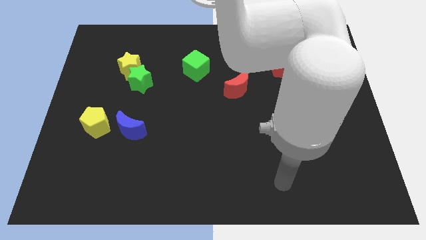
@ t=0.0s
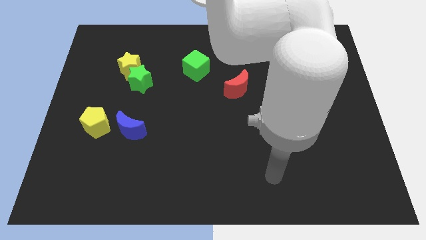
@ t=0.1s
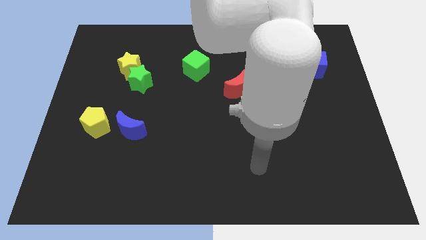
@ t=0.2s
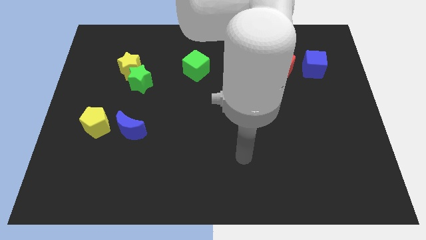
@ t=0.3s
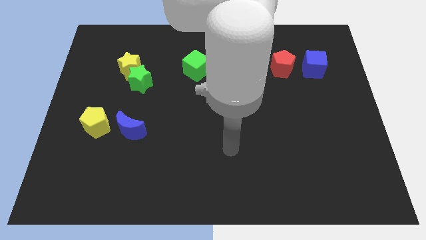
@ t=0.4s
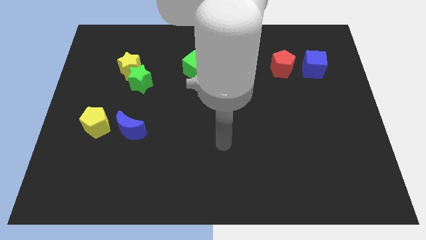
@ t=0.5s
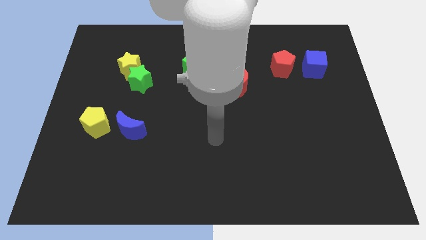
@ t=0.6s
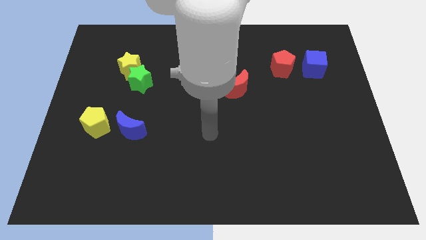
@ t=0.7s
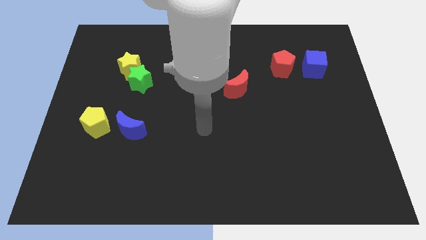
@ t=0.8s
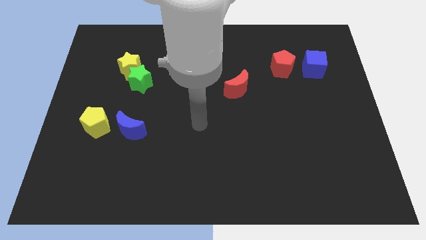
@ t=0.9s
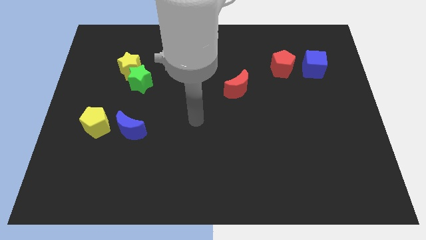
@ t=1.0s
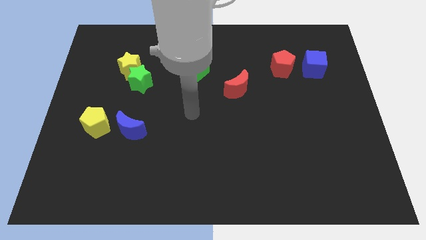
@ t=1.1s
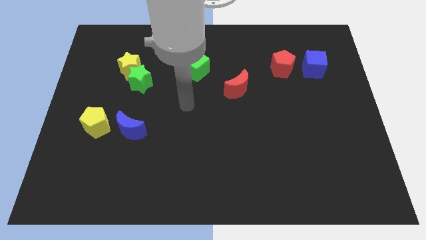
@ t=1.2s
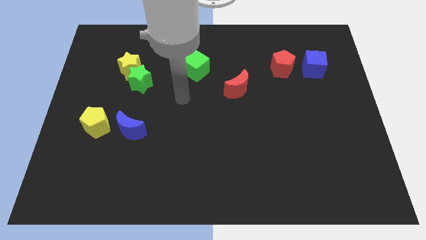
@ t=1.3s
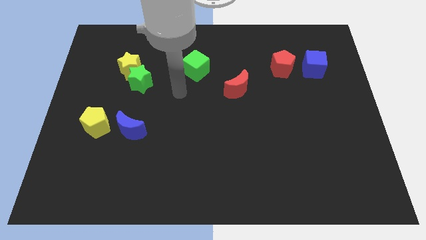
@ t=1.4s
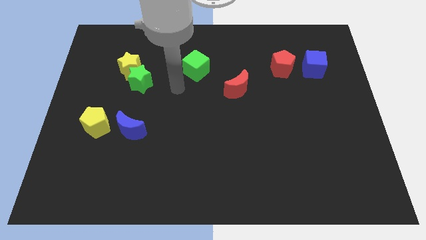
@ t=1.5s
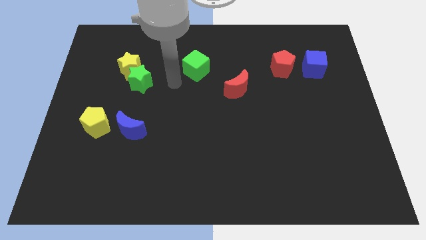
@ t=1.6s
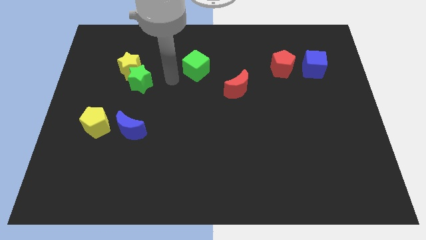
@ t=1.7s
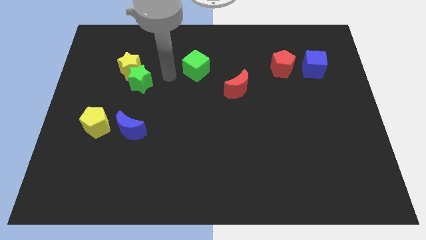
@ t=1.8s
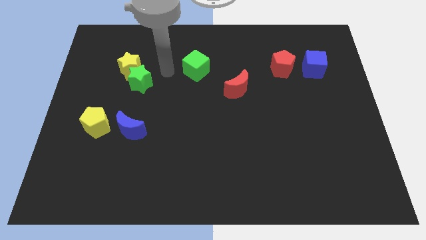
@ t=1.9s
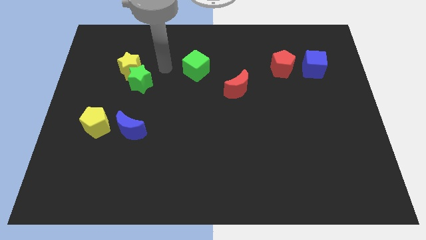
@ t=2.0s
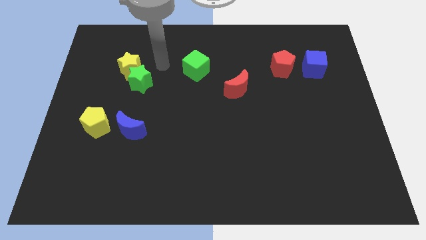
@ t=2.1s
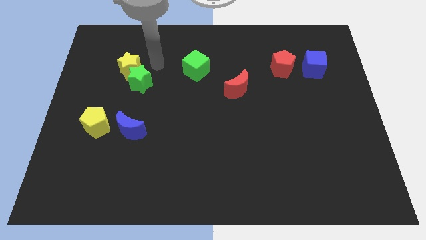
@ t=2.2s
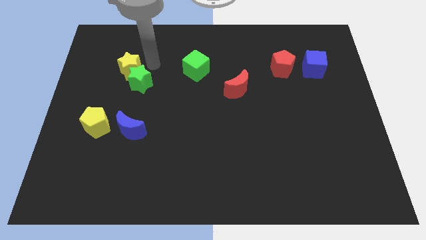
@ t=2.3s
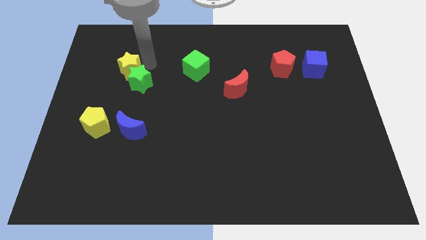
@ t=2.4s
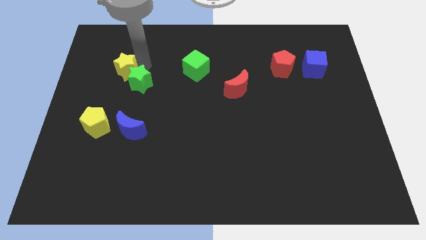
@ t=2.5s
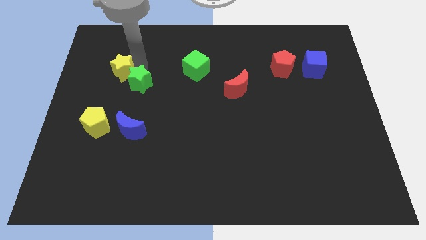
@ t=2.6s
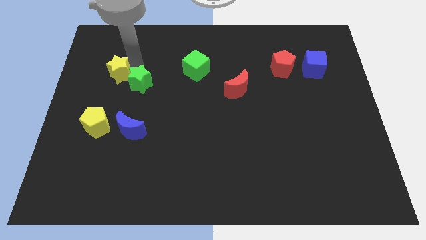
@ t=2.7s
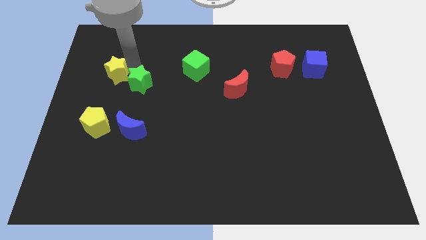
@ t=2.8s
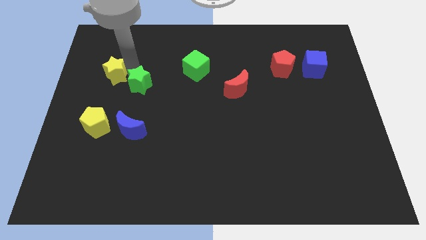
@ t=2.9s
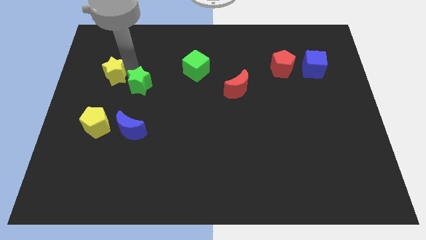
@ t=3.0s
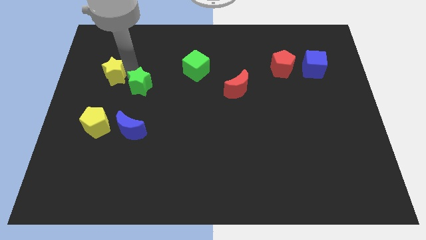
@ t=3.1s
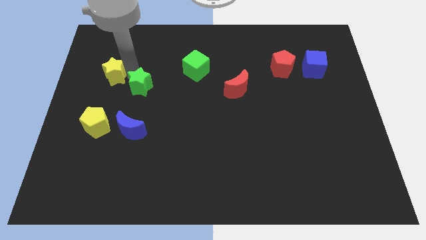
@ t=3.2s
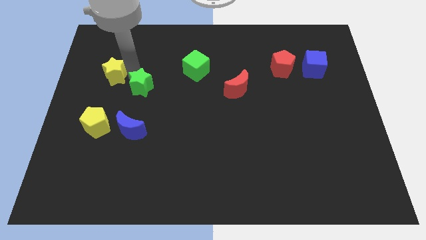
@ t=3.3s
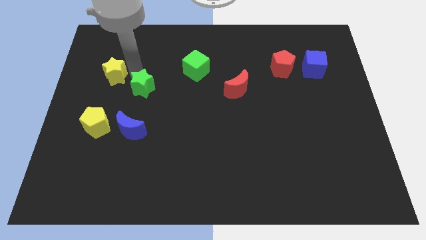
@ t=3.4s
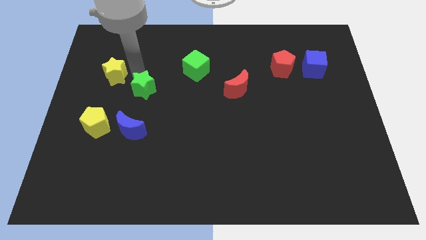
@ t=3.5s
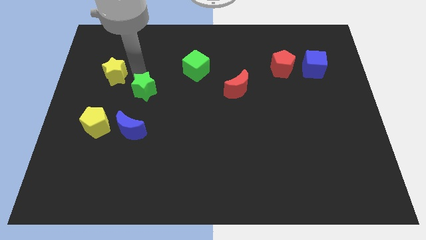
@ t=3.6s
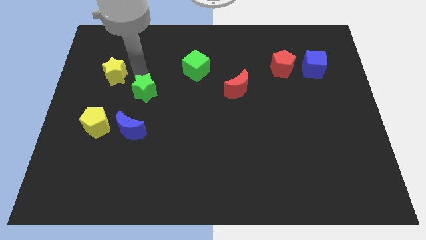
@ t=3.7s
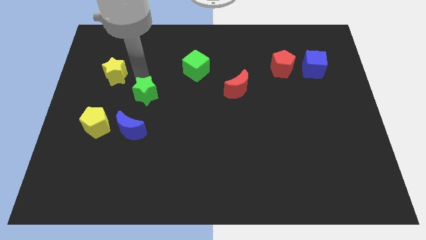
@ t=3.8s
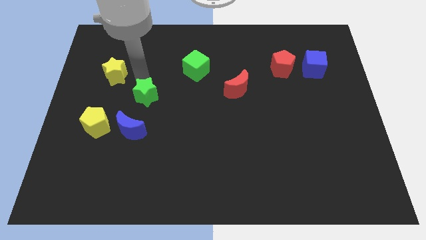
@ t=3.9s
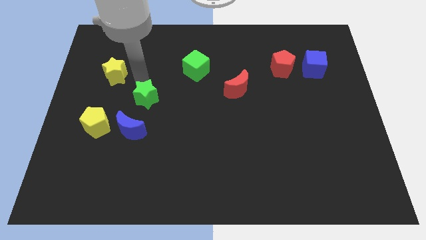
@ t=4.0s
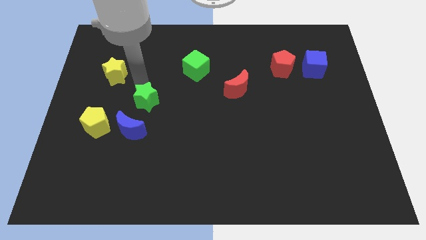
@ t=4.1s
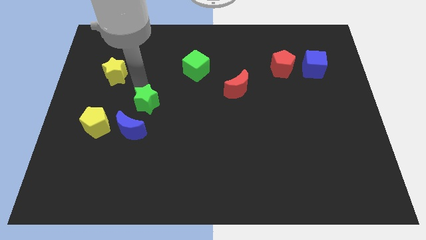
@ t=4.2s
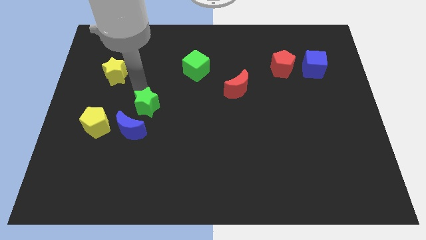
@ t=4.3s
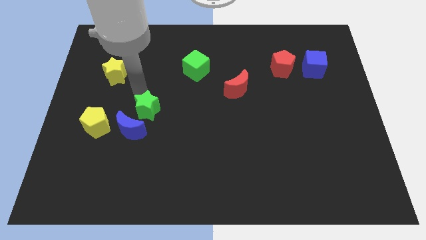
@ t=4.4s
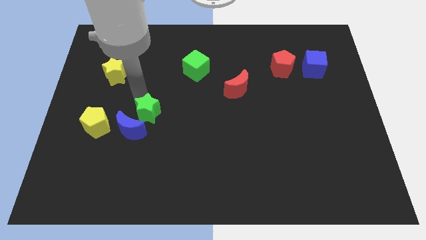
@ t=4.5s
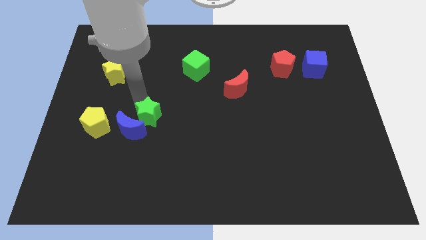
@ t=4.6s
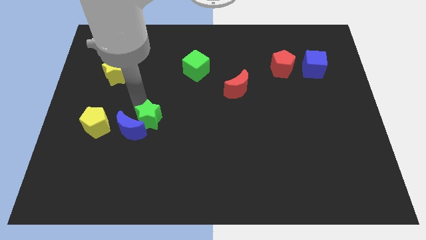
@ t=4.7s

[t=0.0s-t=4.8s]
move the green star to the blue moon

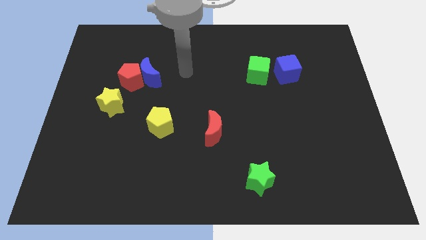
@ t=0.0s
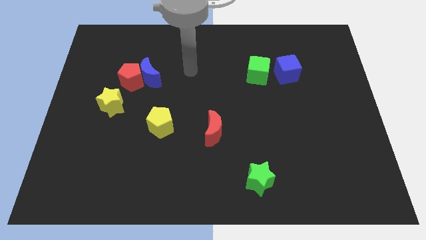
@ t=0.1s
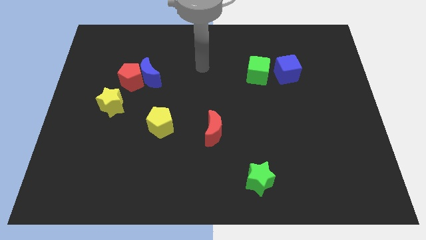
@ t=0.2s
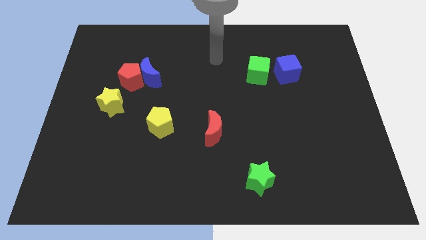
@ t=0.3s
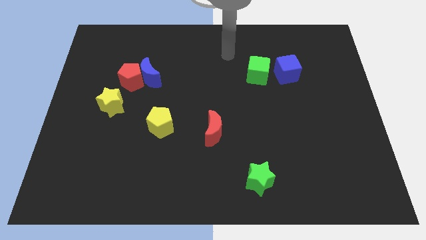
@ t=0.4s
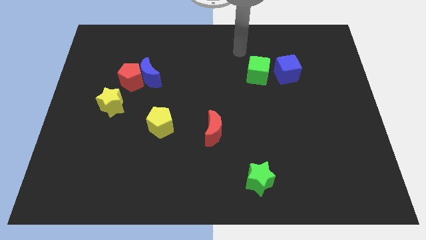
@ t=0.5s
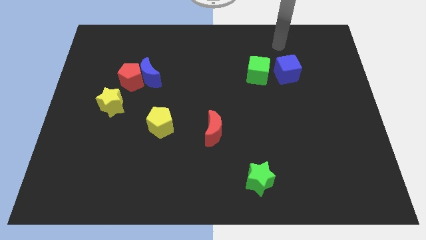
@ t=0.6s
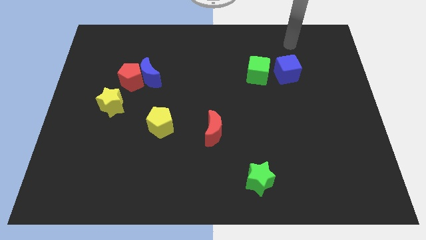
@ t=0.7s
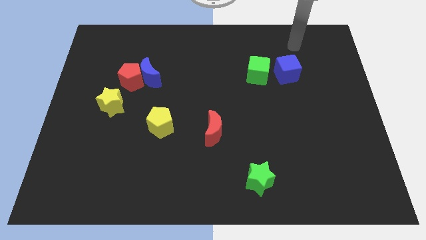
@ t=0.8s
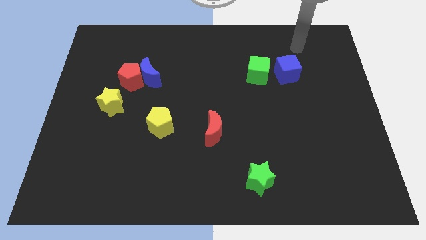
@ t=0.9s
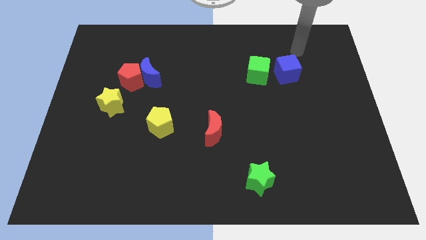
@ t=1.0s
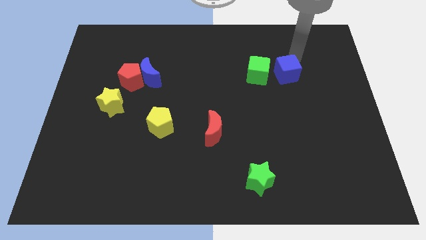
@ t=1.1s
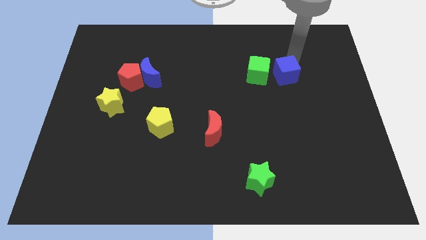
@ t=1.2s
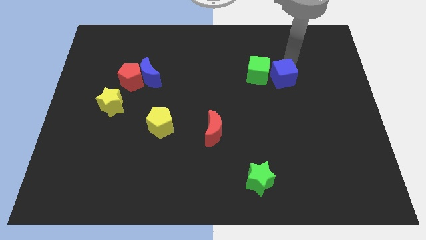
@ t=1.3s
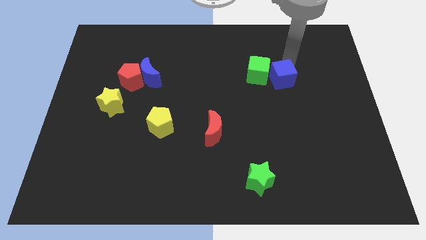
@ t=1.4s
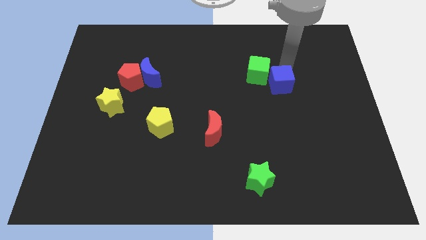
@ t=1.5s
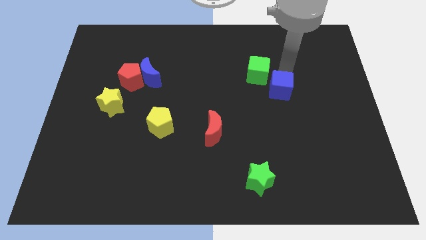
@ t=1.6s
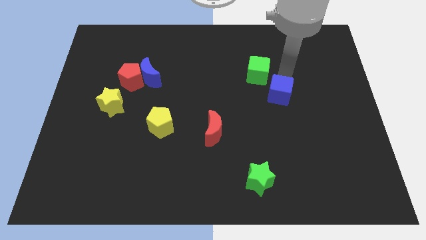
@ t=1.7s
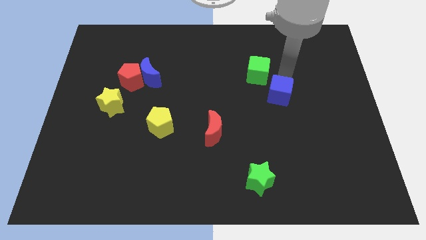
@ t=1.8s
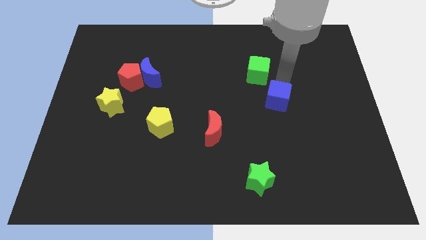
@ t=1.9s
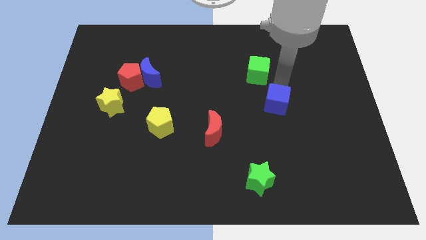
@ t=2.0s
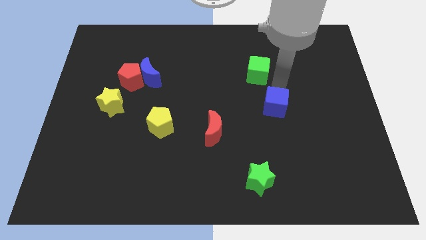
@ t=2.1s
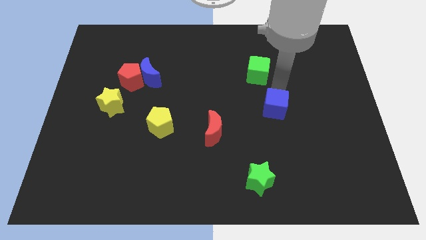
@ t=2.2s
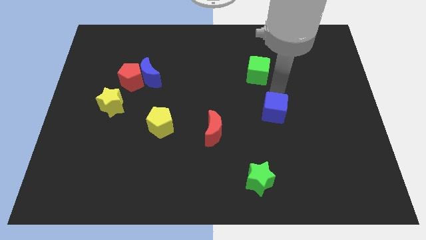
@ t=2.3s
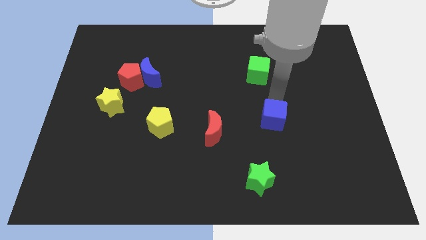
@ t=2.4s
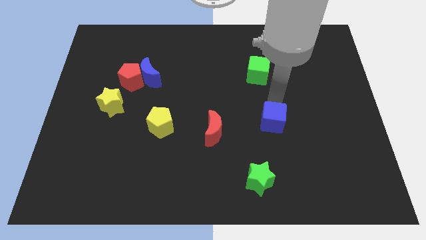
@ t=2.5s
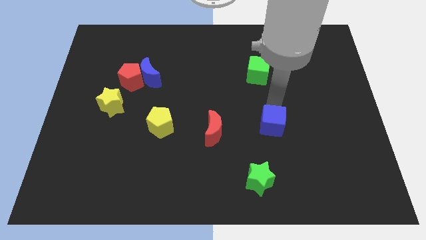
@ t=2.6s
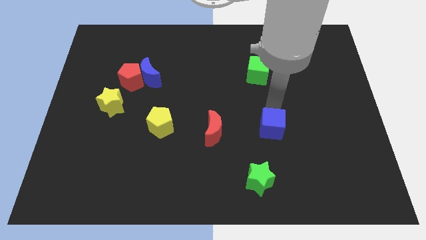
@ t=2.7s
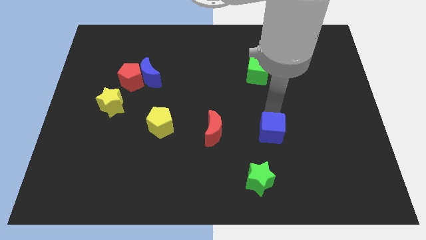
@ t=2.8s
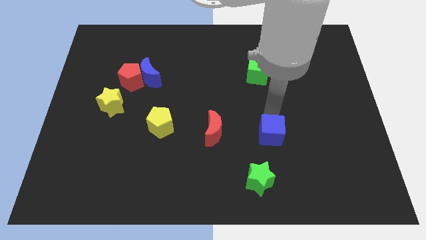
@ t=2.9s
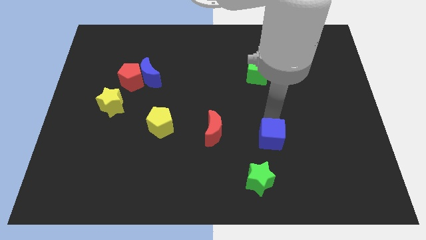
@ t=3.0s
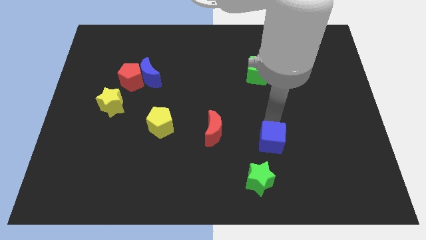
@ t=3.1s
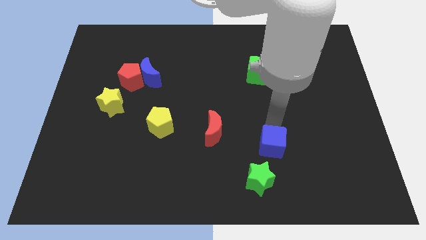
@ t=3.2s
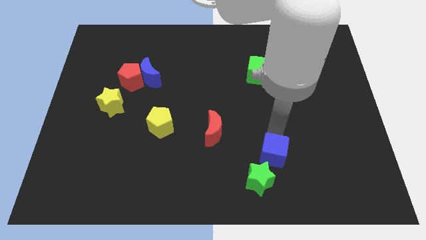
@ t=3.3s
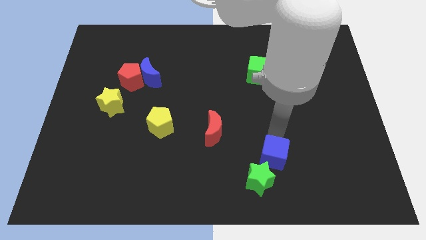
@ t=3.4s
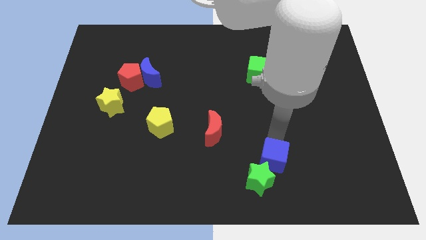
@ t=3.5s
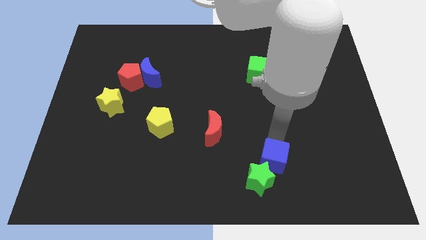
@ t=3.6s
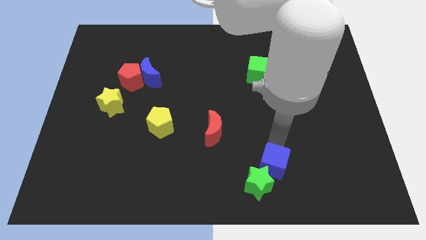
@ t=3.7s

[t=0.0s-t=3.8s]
put the blue cube next to the green star
